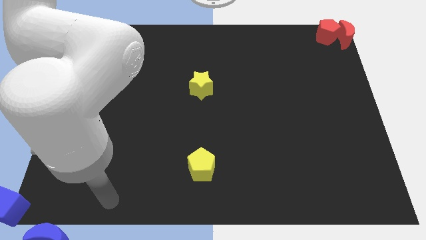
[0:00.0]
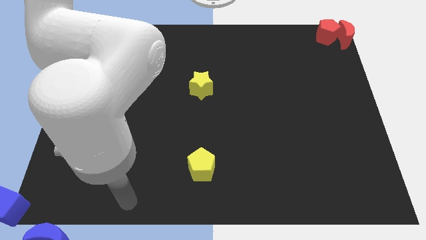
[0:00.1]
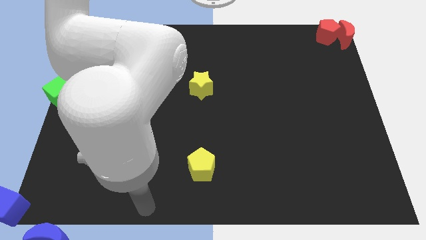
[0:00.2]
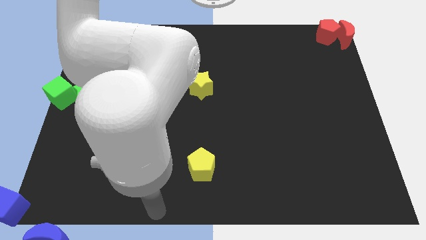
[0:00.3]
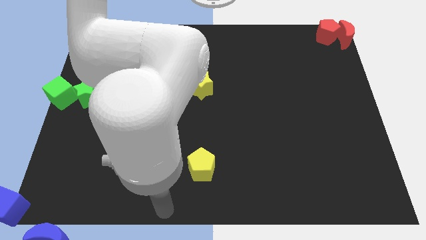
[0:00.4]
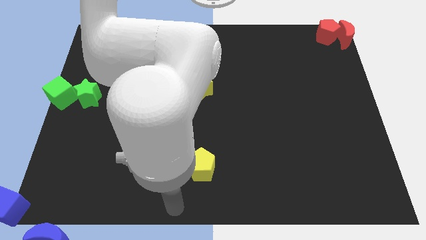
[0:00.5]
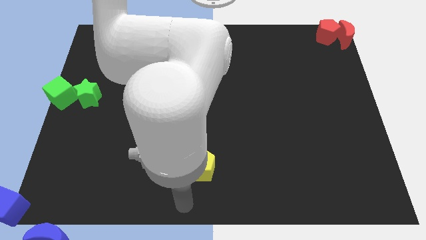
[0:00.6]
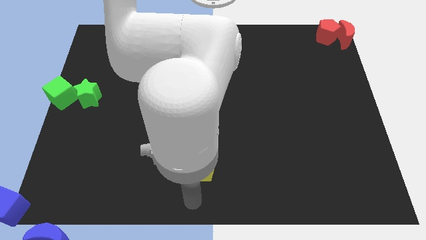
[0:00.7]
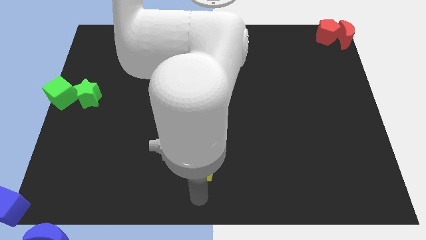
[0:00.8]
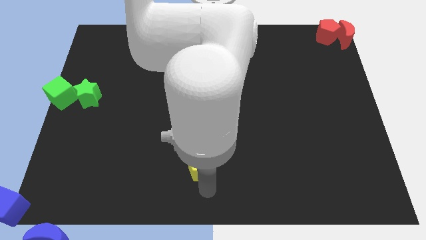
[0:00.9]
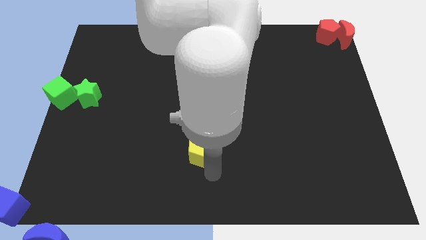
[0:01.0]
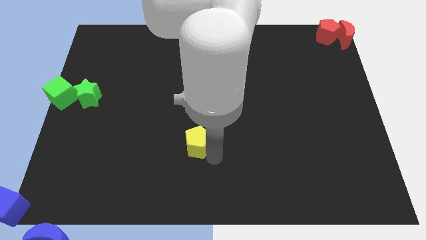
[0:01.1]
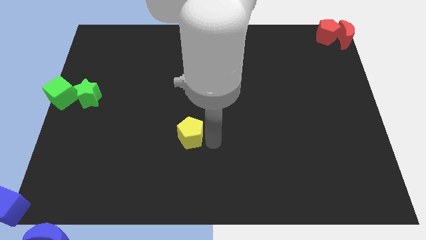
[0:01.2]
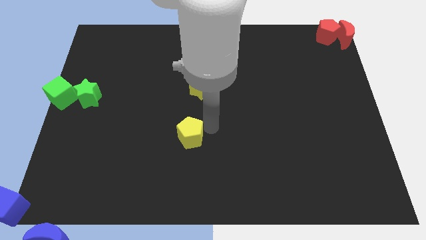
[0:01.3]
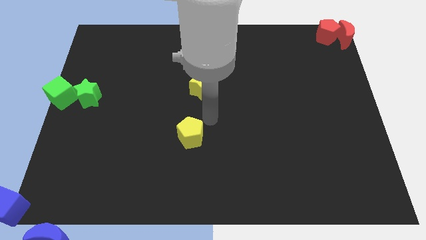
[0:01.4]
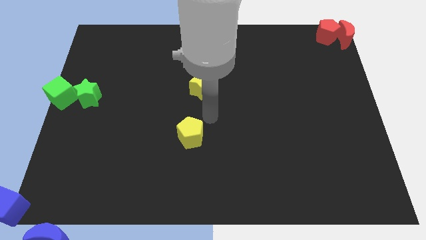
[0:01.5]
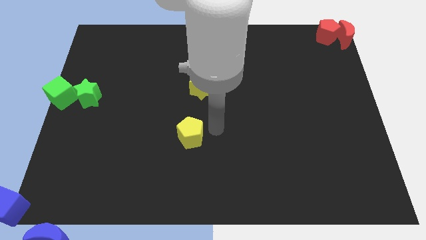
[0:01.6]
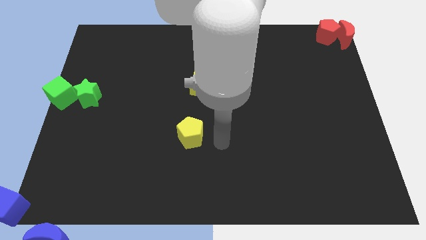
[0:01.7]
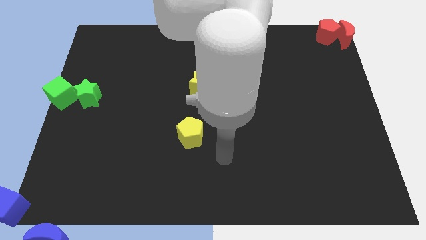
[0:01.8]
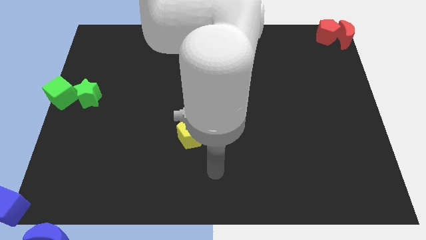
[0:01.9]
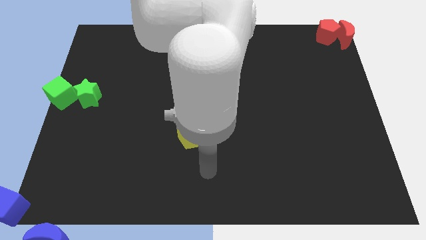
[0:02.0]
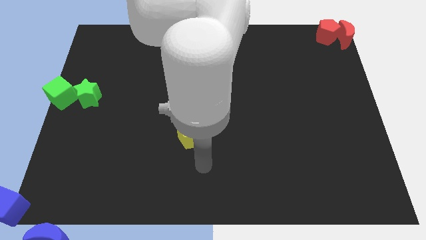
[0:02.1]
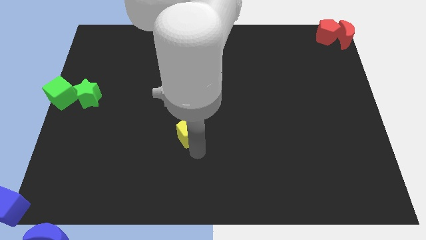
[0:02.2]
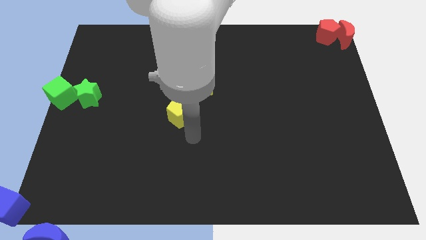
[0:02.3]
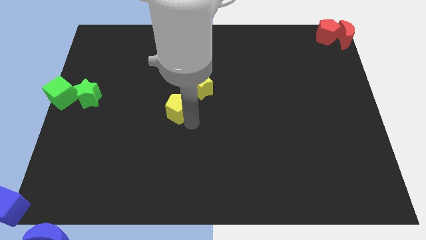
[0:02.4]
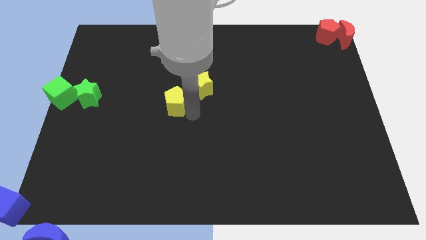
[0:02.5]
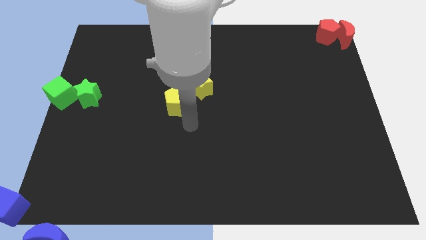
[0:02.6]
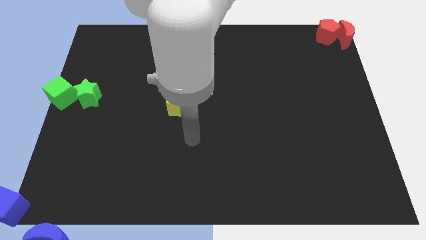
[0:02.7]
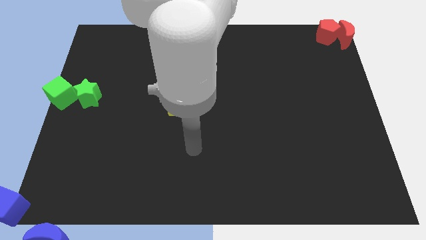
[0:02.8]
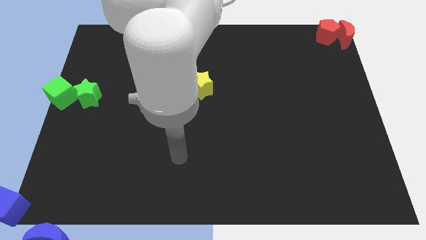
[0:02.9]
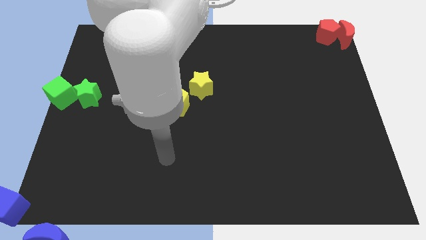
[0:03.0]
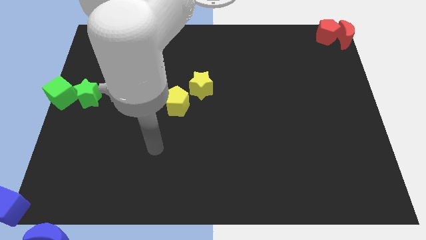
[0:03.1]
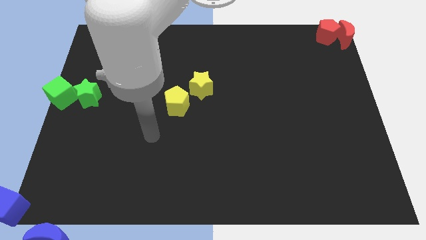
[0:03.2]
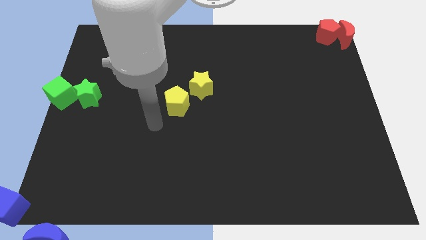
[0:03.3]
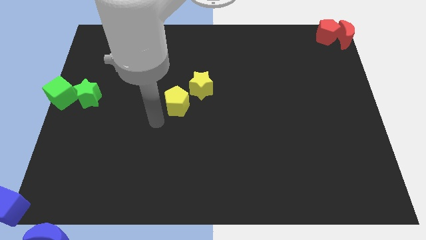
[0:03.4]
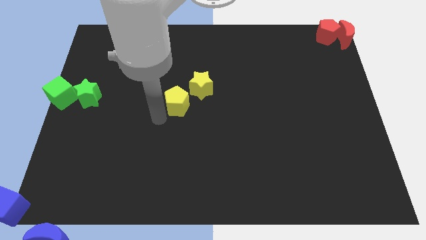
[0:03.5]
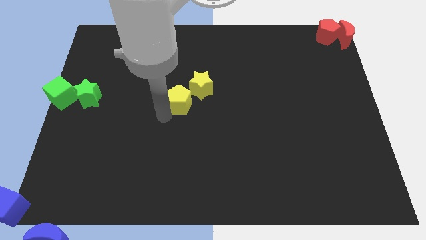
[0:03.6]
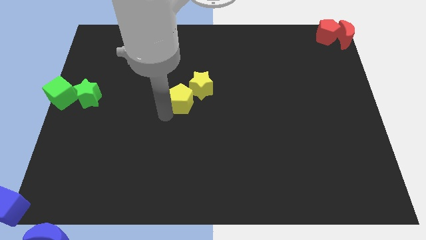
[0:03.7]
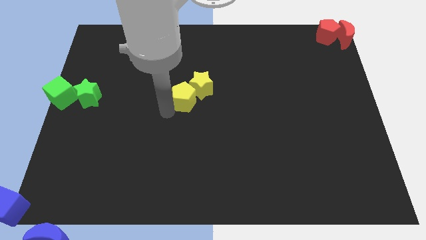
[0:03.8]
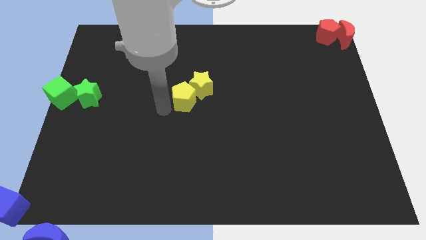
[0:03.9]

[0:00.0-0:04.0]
place the yellow pentagon diagonal bottom of yellow star

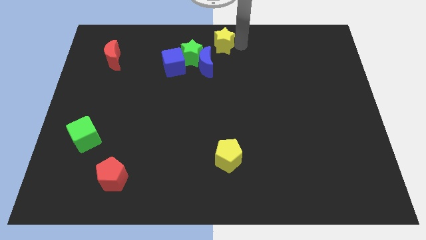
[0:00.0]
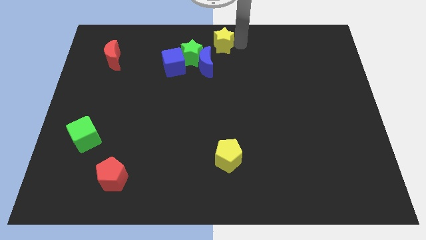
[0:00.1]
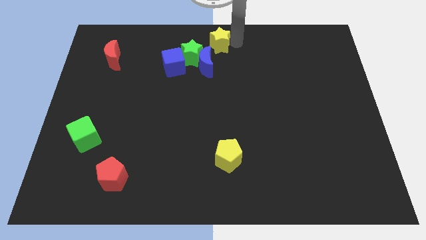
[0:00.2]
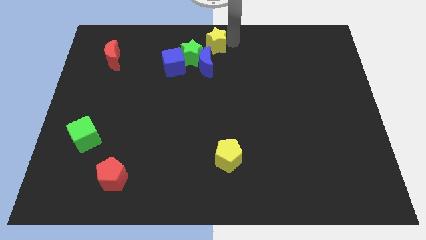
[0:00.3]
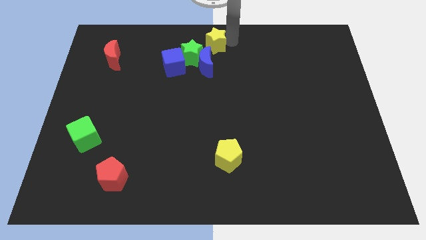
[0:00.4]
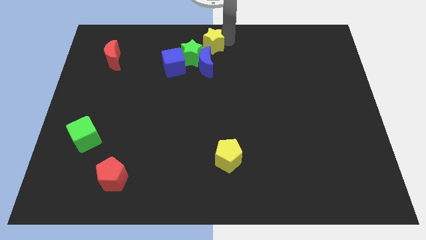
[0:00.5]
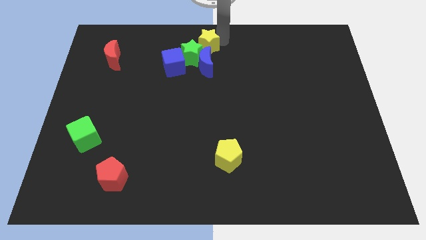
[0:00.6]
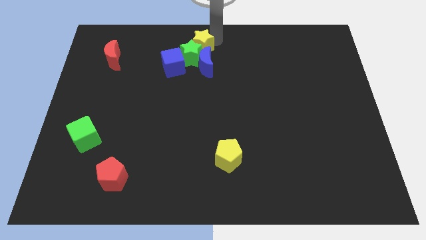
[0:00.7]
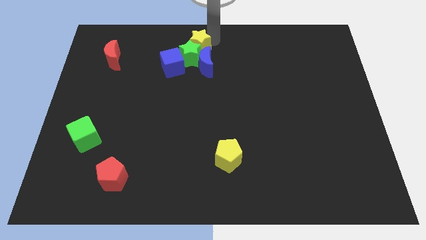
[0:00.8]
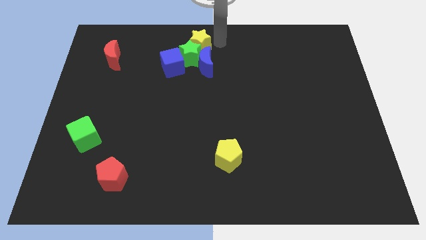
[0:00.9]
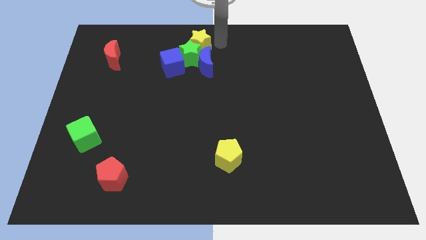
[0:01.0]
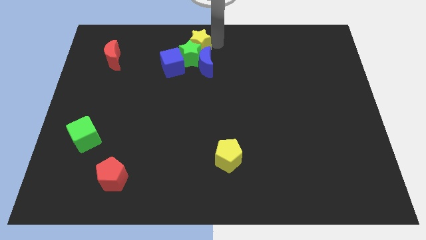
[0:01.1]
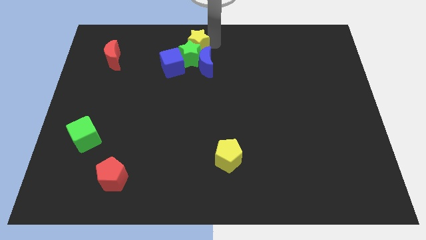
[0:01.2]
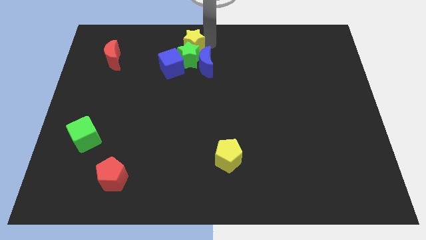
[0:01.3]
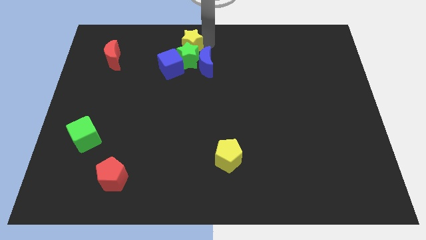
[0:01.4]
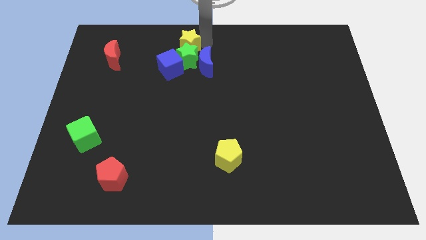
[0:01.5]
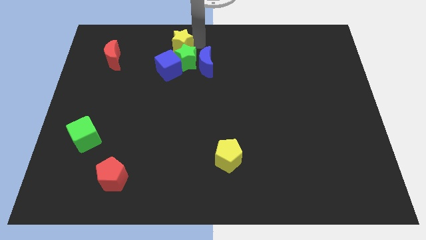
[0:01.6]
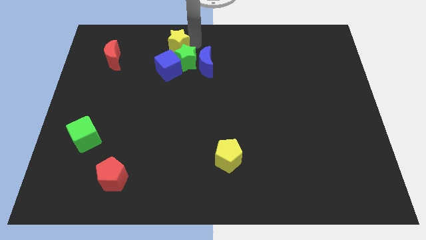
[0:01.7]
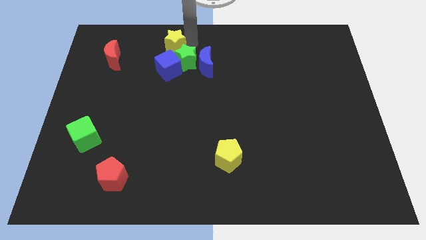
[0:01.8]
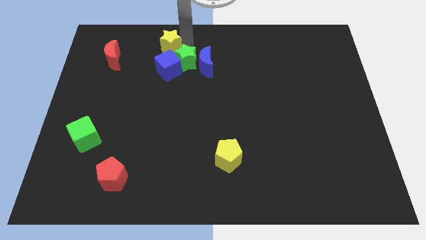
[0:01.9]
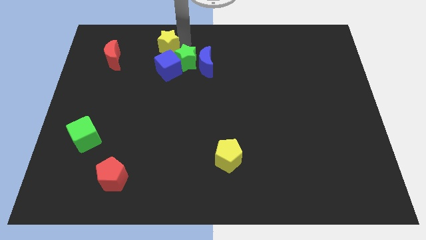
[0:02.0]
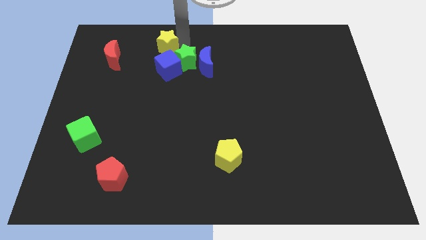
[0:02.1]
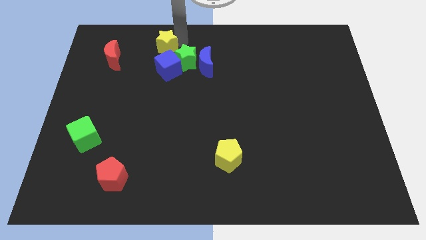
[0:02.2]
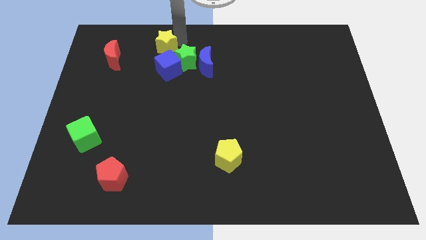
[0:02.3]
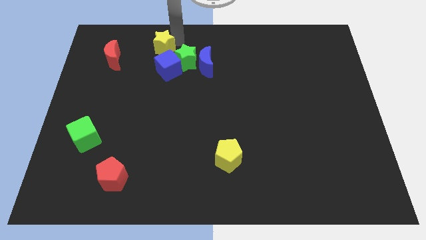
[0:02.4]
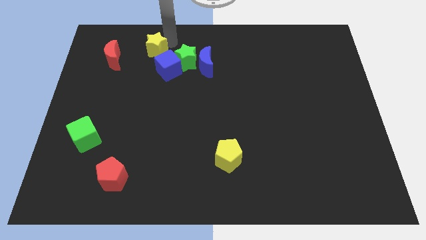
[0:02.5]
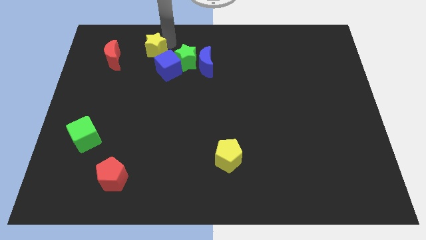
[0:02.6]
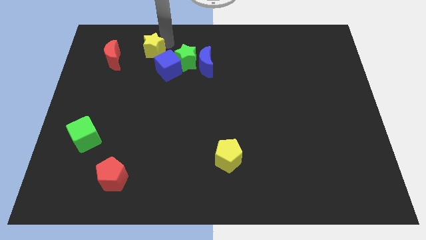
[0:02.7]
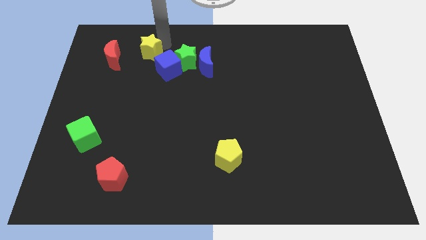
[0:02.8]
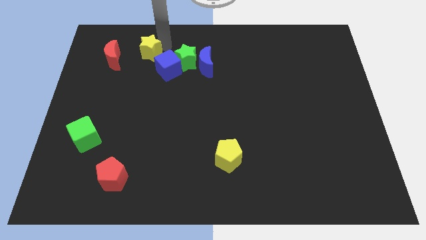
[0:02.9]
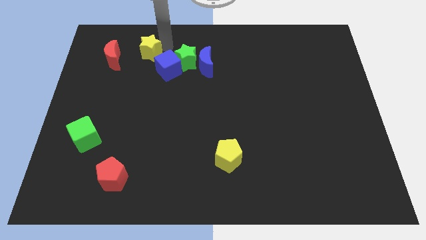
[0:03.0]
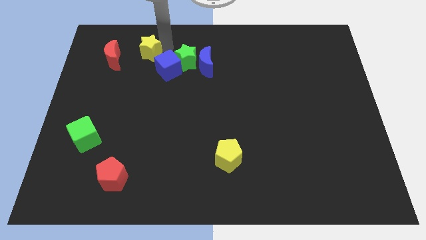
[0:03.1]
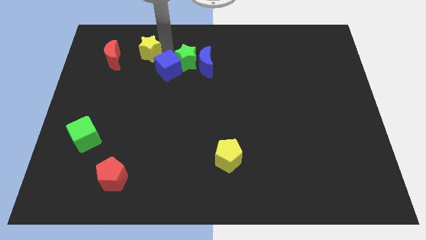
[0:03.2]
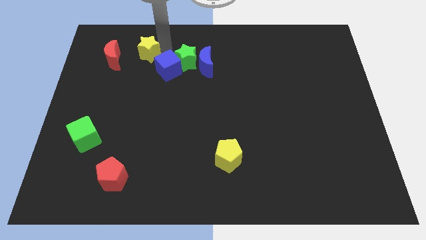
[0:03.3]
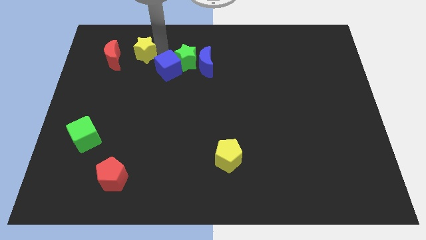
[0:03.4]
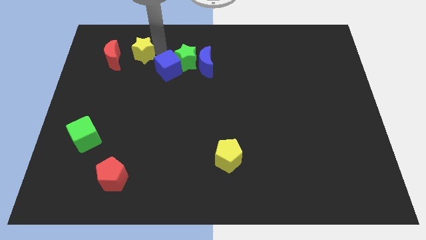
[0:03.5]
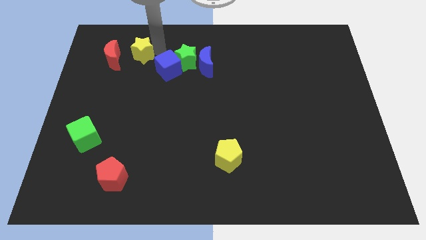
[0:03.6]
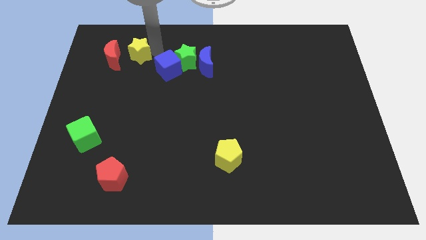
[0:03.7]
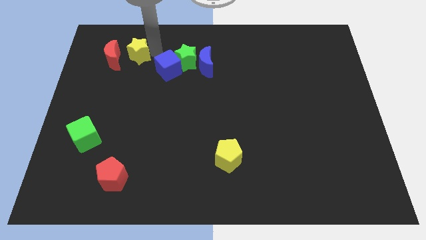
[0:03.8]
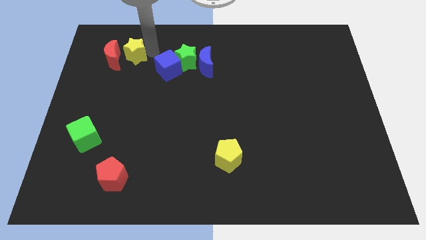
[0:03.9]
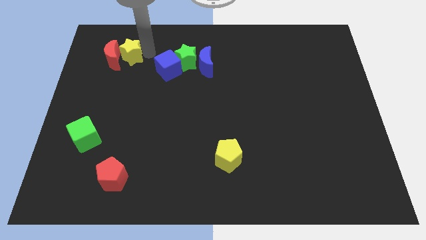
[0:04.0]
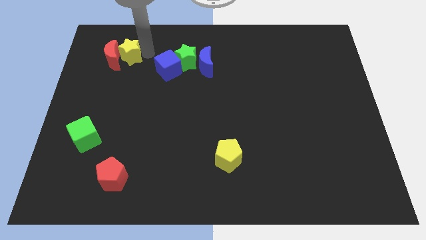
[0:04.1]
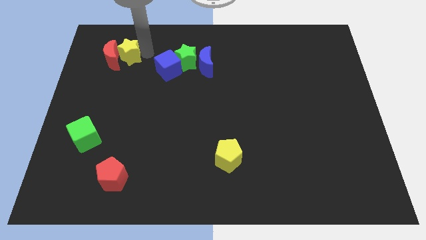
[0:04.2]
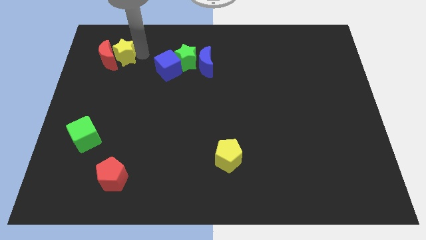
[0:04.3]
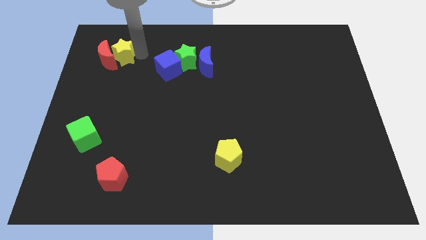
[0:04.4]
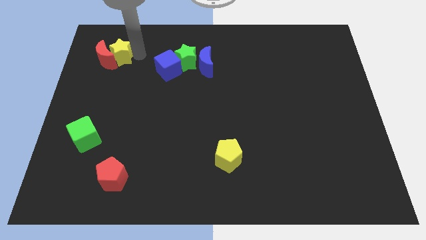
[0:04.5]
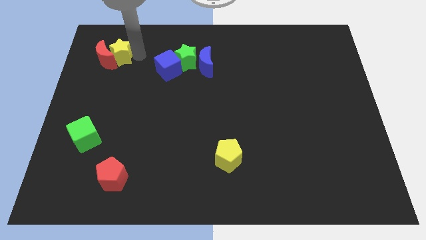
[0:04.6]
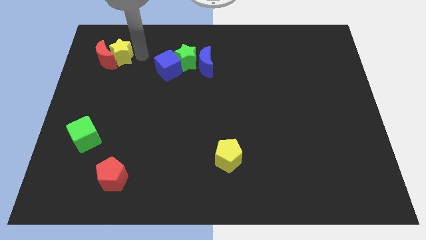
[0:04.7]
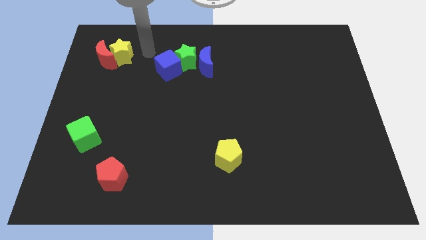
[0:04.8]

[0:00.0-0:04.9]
move the yellow star into the red crescent
